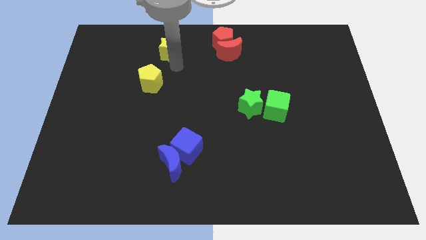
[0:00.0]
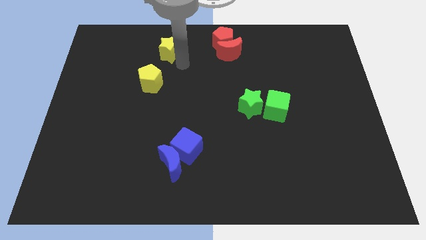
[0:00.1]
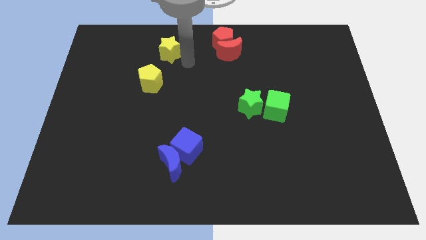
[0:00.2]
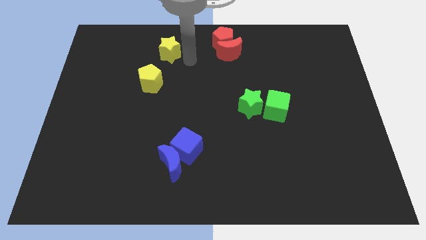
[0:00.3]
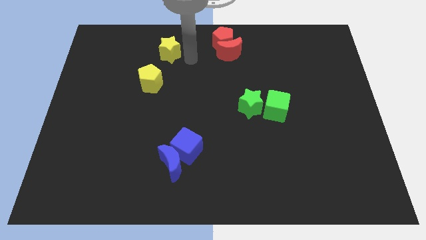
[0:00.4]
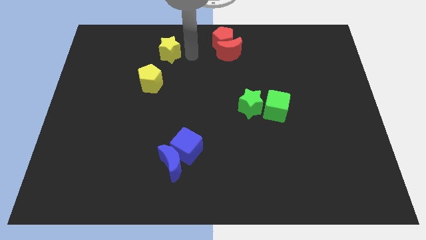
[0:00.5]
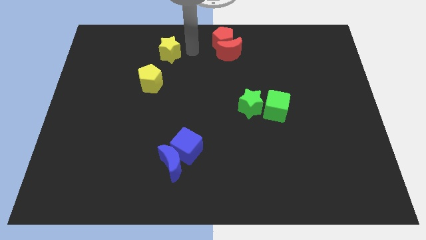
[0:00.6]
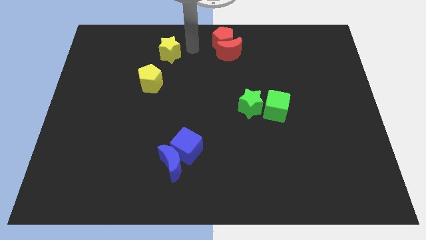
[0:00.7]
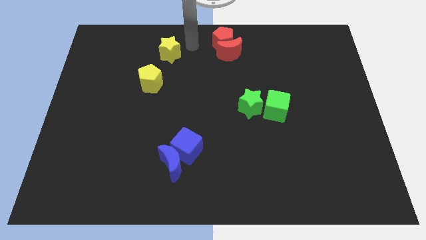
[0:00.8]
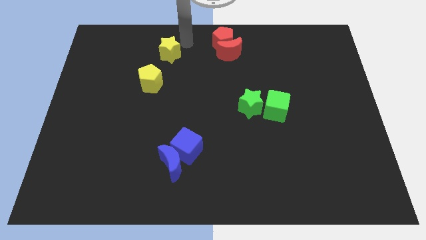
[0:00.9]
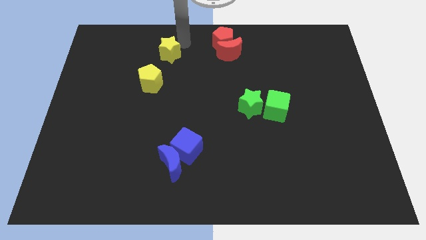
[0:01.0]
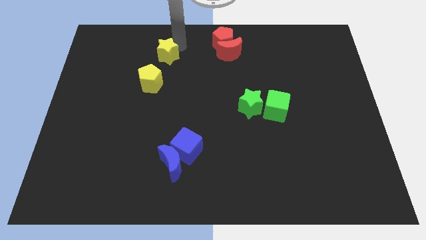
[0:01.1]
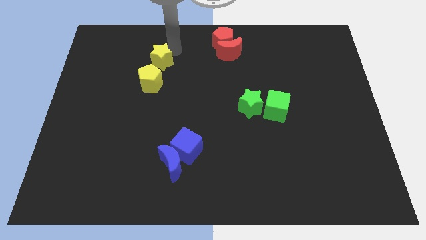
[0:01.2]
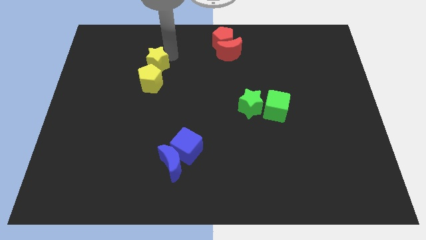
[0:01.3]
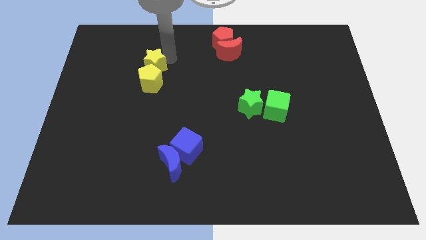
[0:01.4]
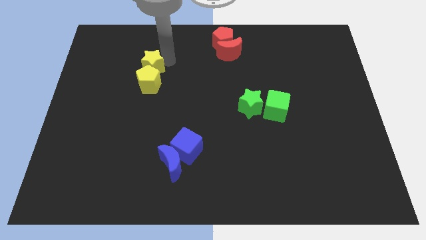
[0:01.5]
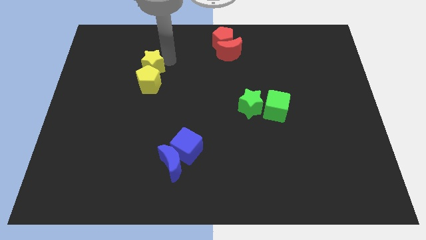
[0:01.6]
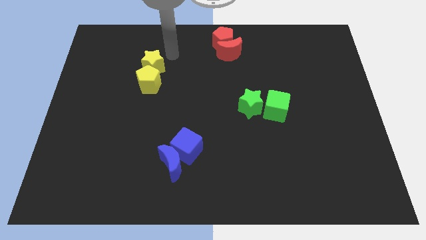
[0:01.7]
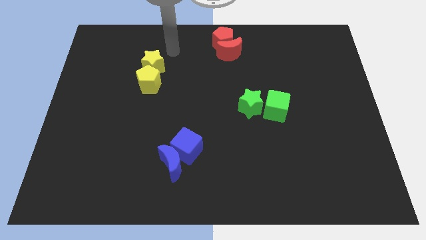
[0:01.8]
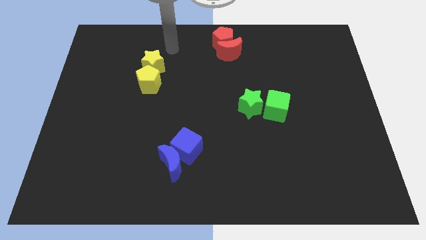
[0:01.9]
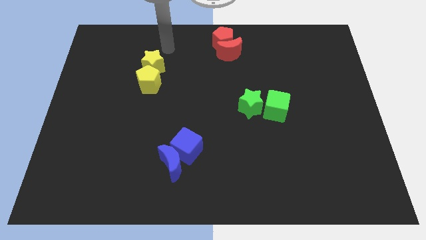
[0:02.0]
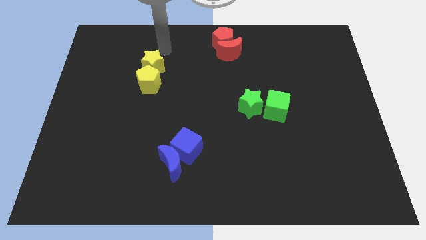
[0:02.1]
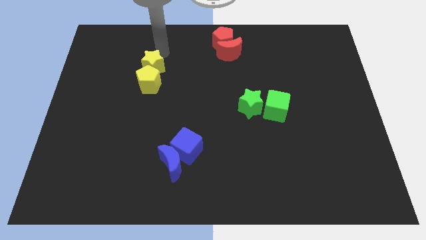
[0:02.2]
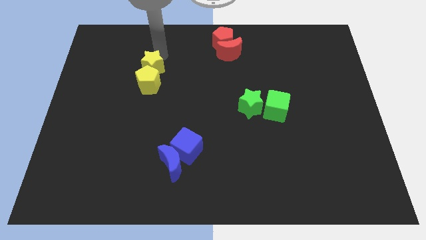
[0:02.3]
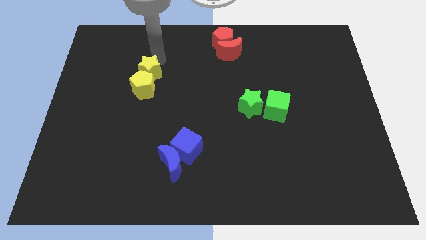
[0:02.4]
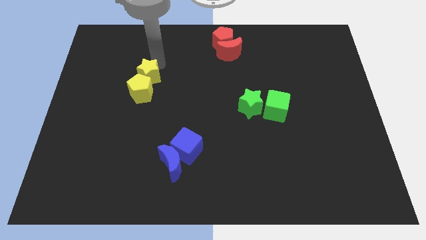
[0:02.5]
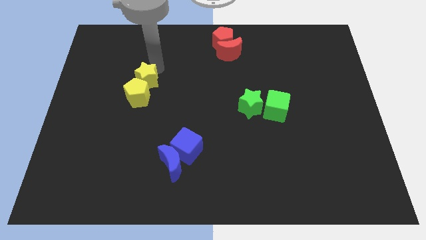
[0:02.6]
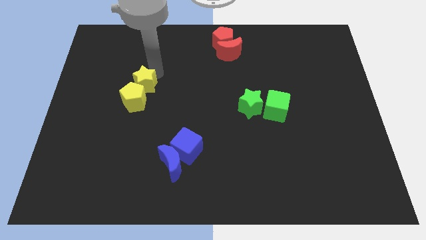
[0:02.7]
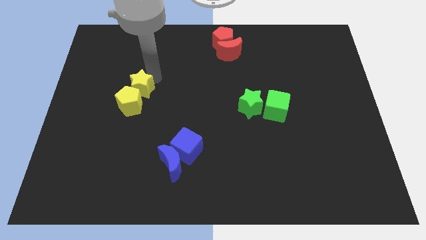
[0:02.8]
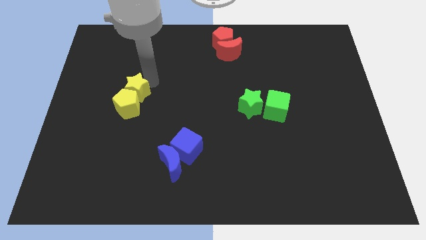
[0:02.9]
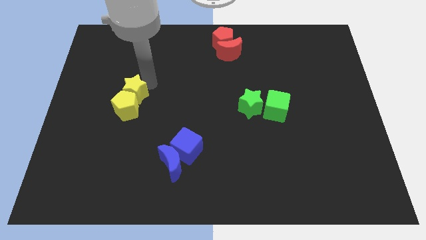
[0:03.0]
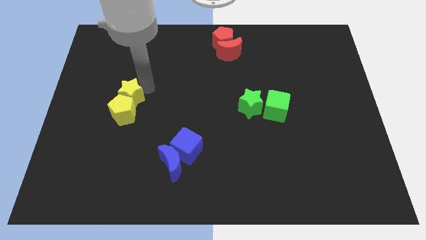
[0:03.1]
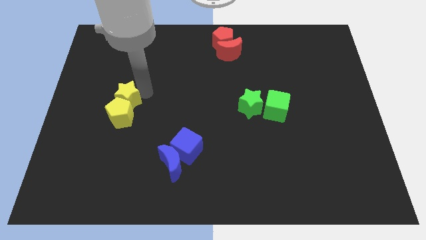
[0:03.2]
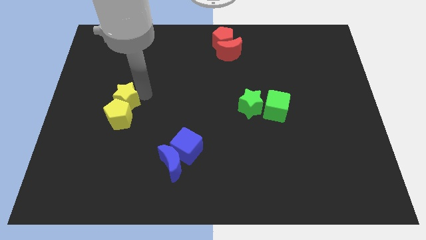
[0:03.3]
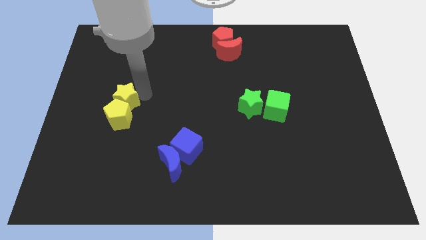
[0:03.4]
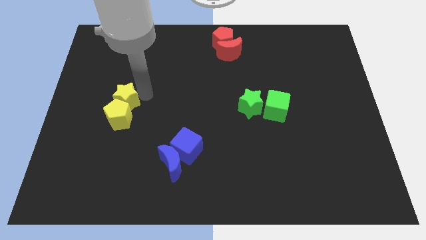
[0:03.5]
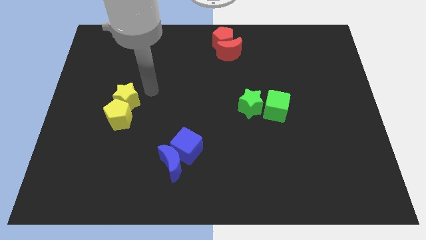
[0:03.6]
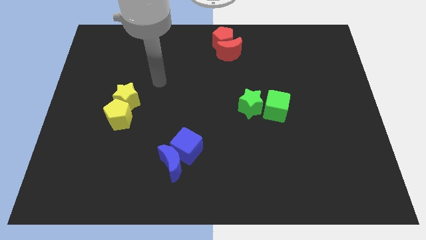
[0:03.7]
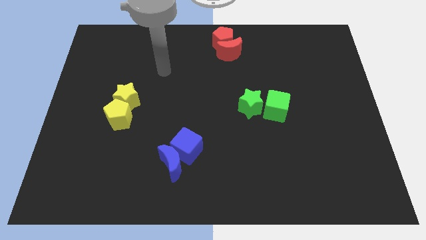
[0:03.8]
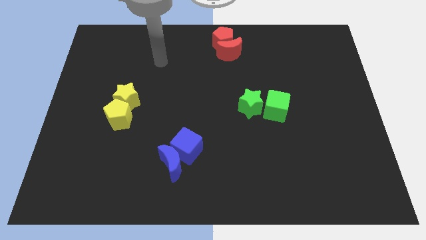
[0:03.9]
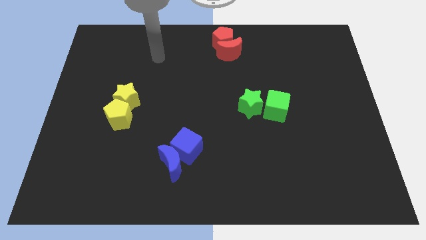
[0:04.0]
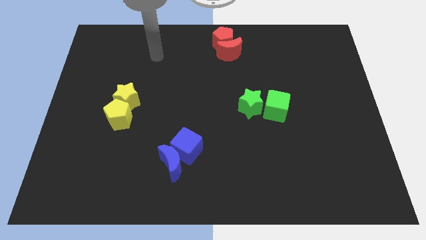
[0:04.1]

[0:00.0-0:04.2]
slide both yellow blocks diagonally on the left side of the both blue blocks

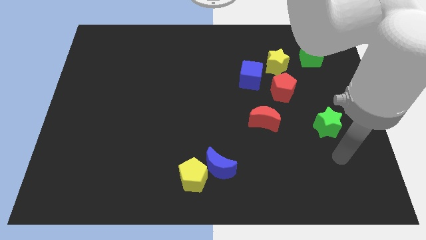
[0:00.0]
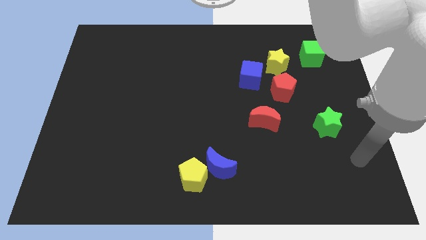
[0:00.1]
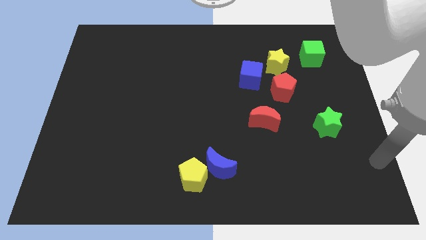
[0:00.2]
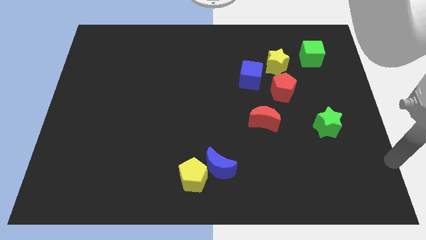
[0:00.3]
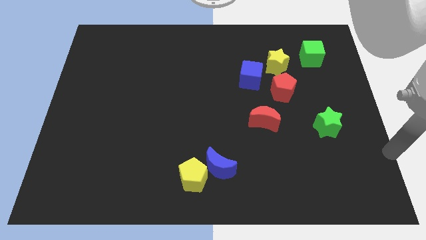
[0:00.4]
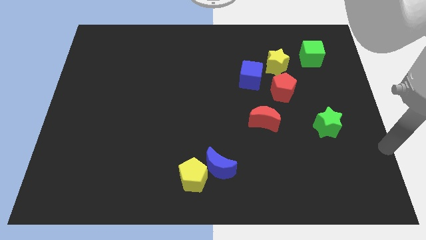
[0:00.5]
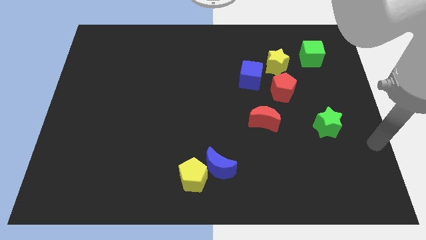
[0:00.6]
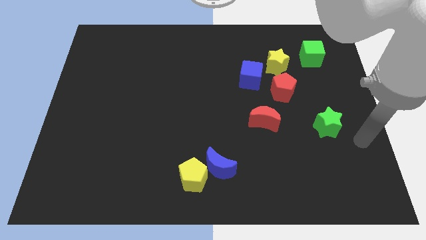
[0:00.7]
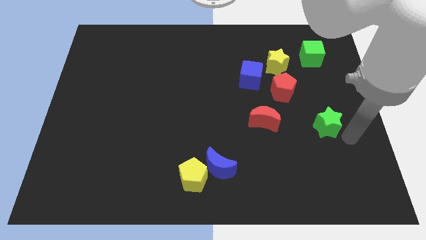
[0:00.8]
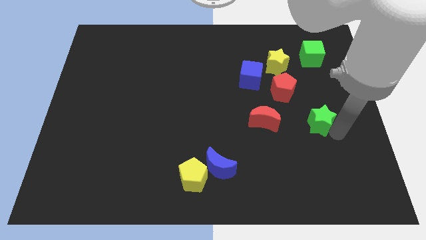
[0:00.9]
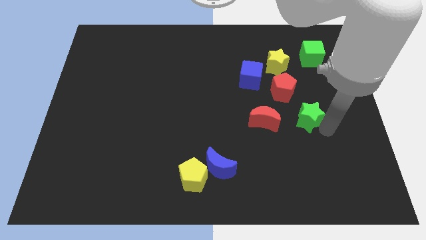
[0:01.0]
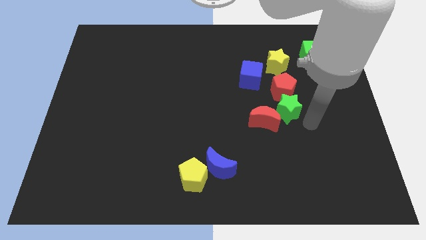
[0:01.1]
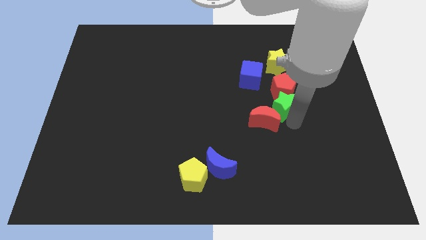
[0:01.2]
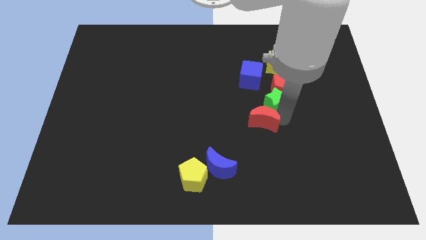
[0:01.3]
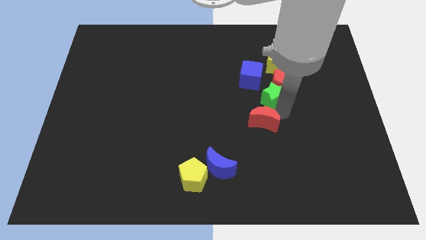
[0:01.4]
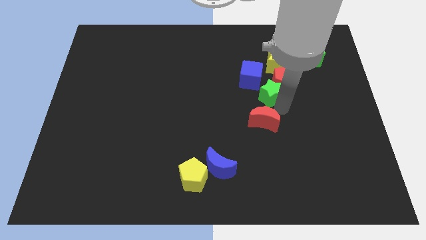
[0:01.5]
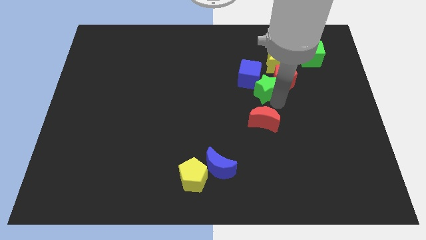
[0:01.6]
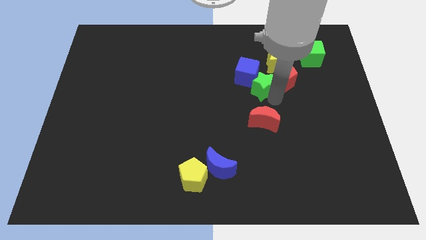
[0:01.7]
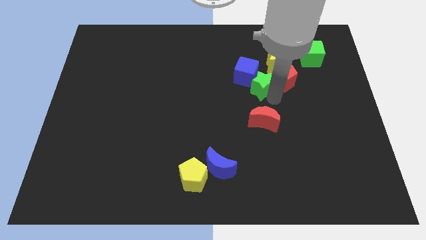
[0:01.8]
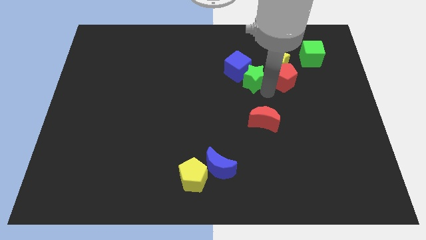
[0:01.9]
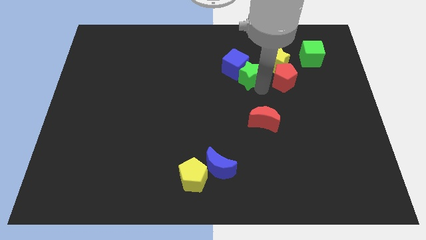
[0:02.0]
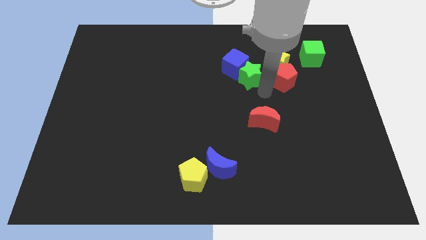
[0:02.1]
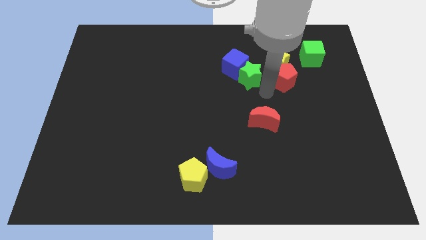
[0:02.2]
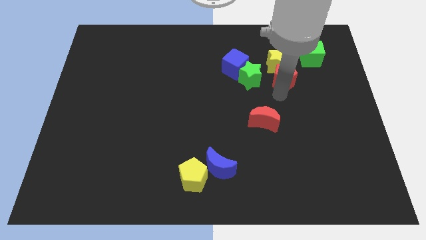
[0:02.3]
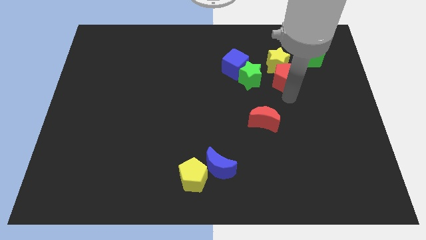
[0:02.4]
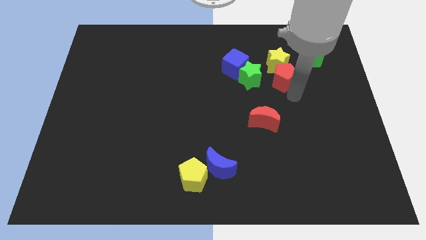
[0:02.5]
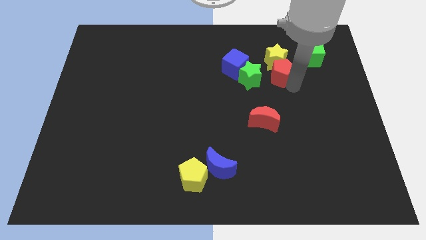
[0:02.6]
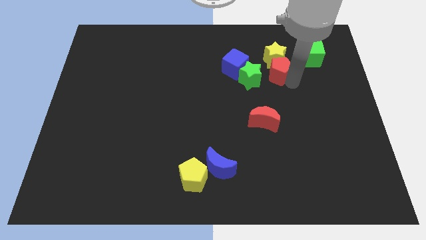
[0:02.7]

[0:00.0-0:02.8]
push the red pentagon into the yellow star

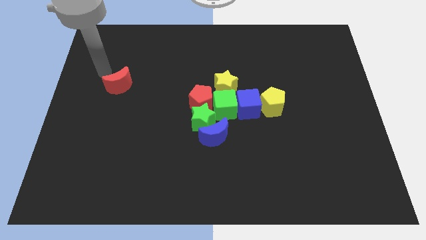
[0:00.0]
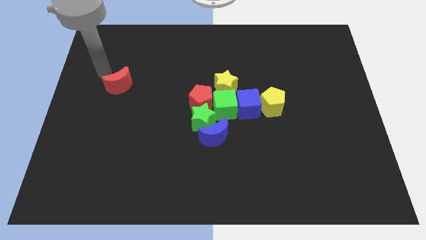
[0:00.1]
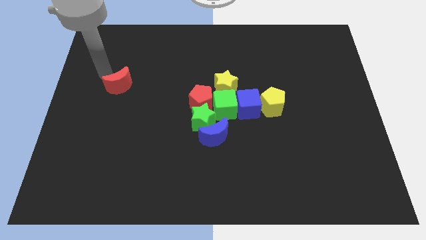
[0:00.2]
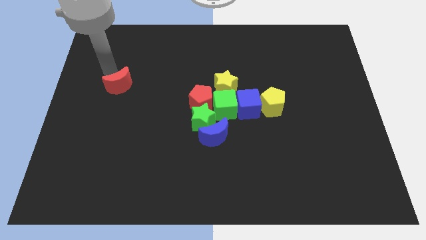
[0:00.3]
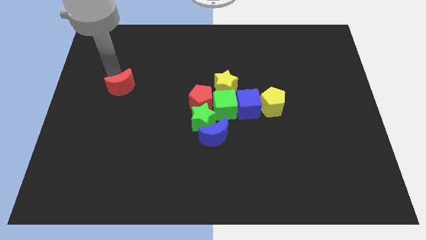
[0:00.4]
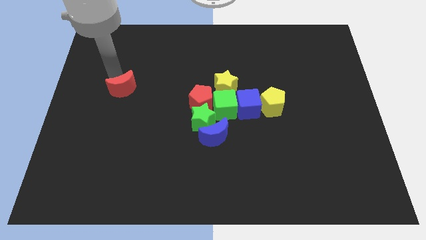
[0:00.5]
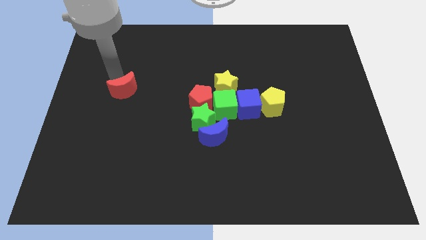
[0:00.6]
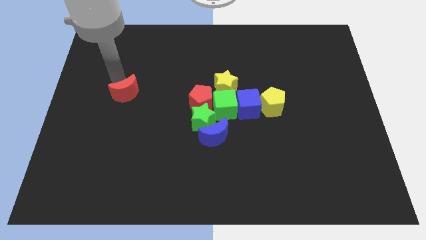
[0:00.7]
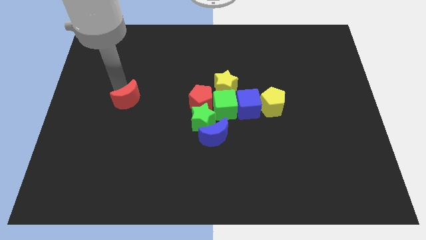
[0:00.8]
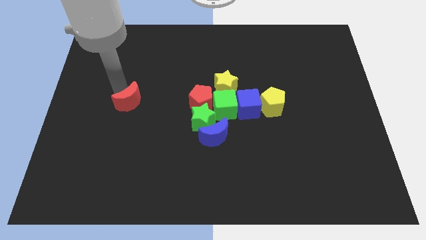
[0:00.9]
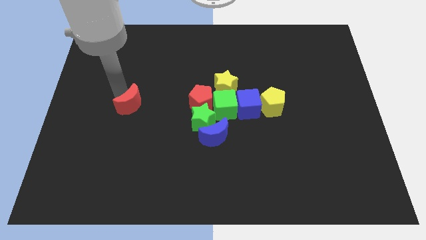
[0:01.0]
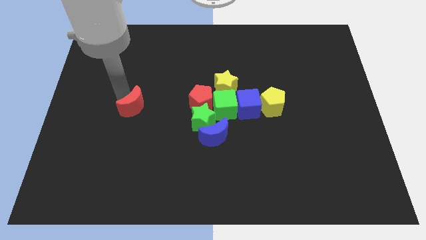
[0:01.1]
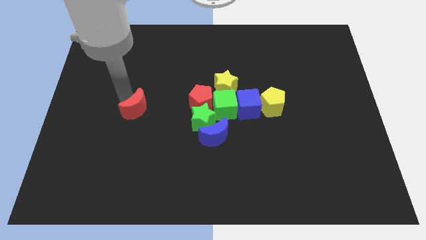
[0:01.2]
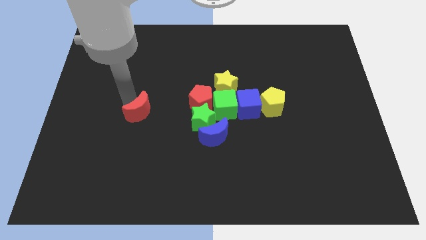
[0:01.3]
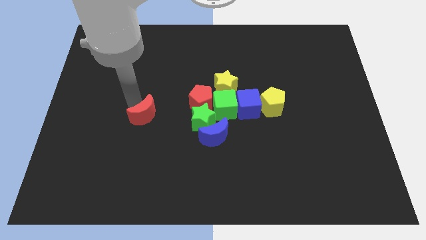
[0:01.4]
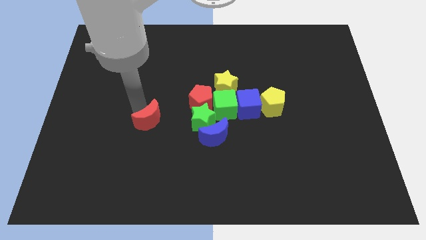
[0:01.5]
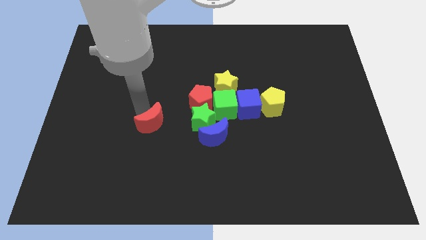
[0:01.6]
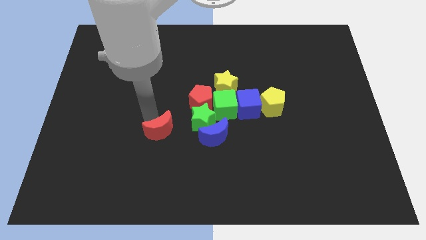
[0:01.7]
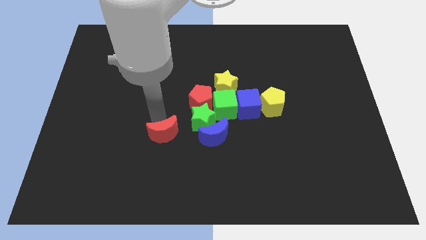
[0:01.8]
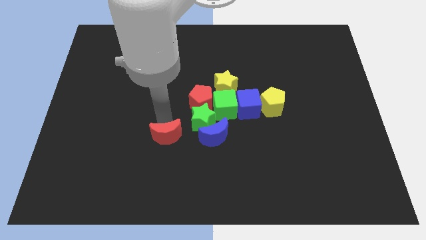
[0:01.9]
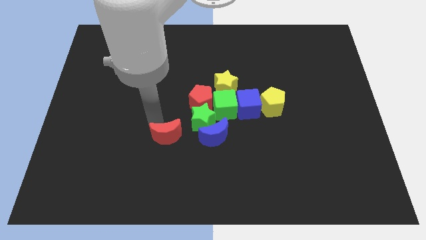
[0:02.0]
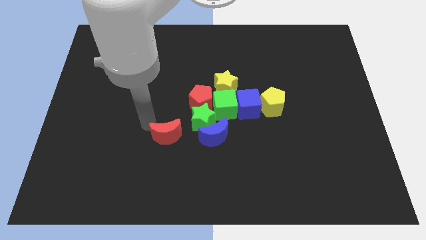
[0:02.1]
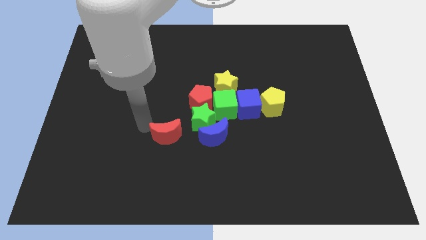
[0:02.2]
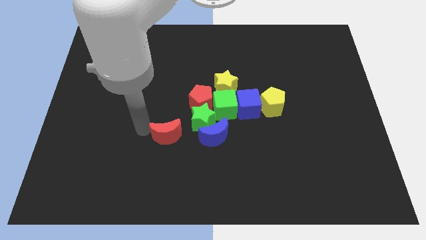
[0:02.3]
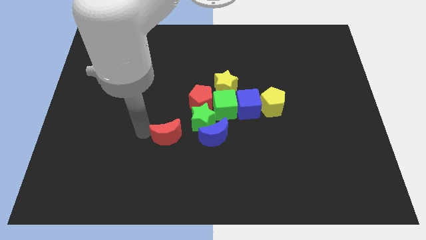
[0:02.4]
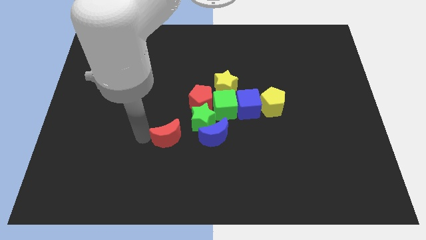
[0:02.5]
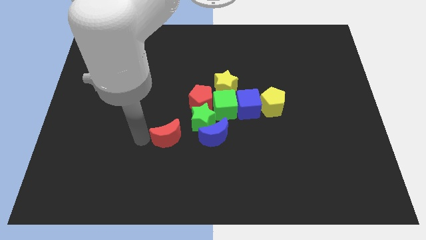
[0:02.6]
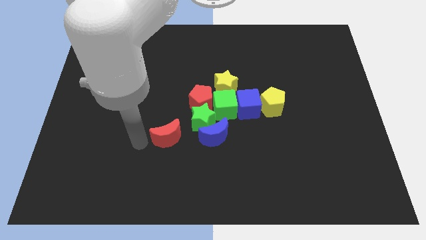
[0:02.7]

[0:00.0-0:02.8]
push the red moon to the left of the green star
